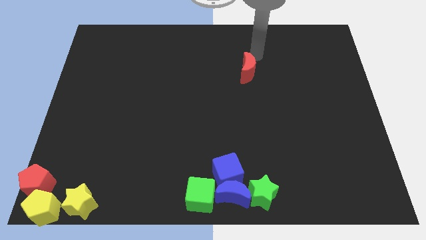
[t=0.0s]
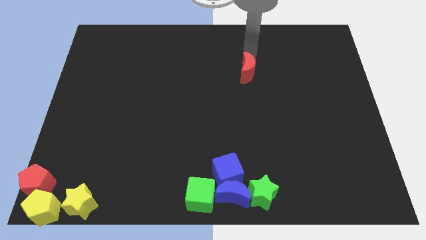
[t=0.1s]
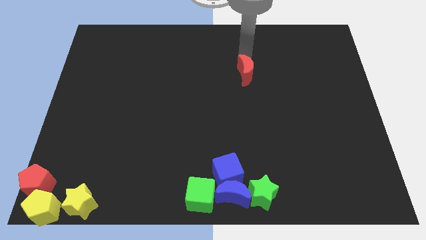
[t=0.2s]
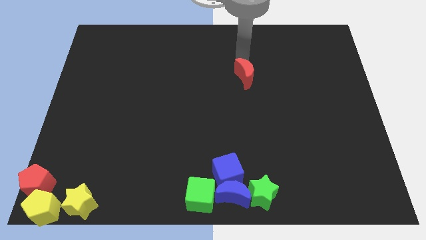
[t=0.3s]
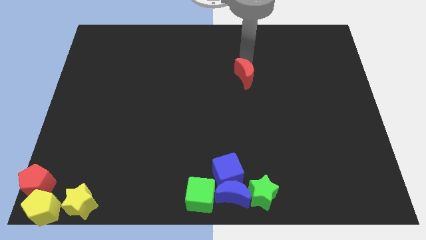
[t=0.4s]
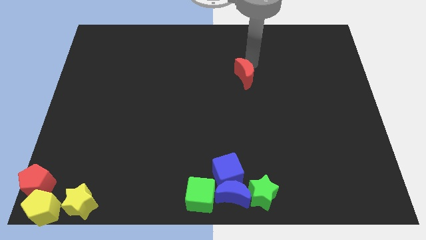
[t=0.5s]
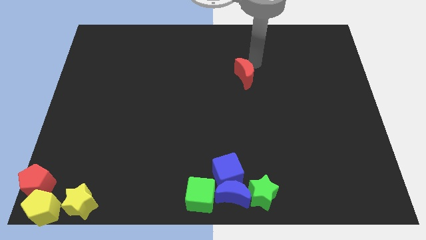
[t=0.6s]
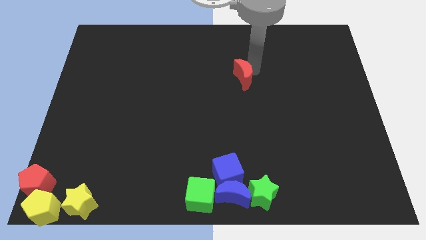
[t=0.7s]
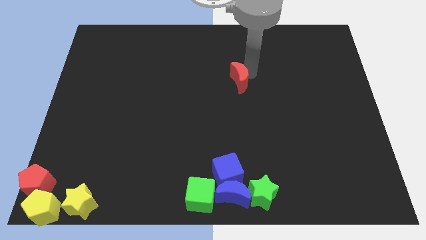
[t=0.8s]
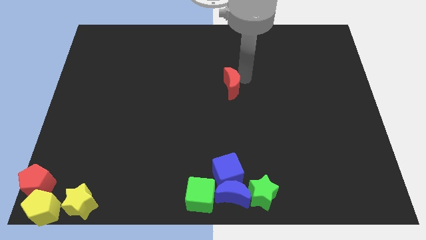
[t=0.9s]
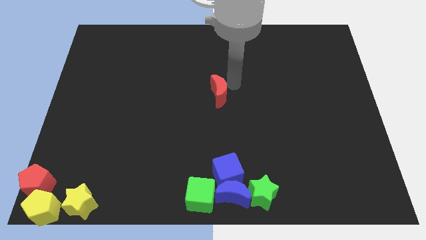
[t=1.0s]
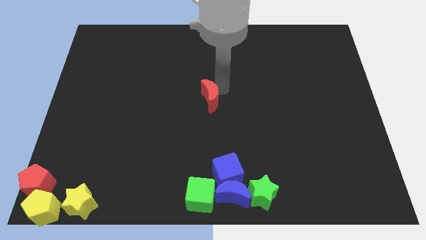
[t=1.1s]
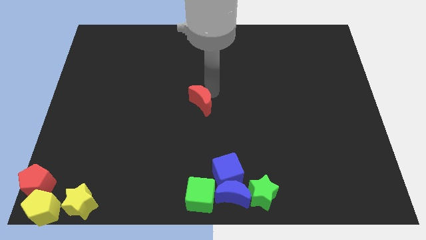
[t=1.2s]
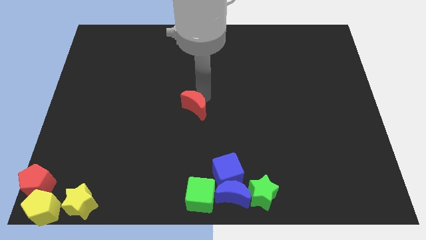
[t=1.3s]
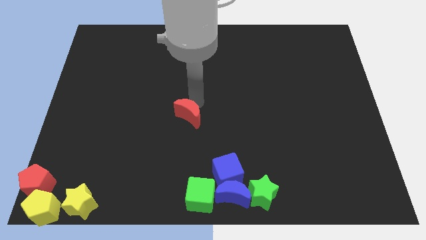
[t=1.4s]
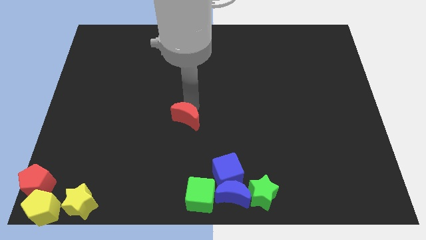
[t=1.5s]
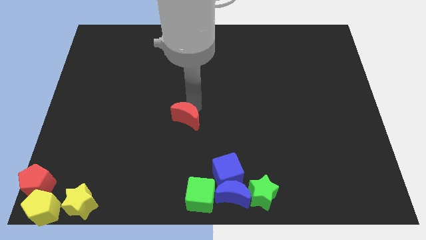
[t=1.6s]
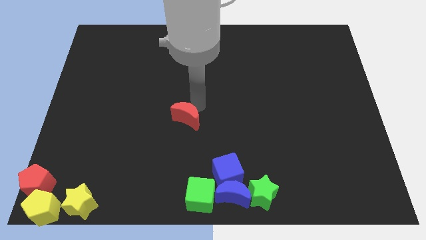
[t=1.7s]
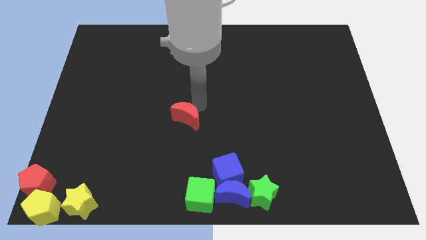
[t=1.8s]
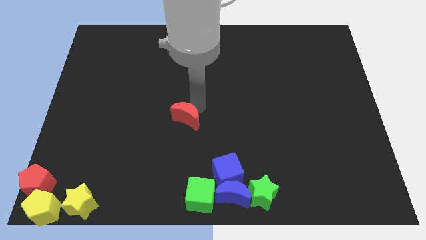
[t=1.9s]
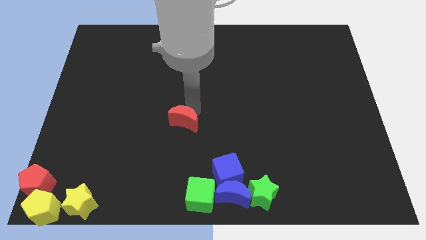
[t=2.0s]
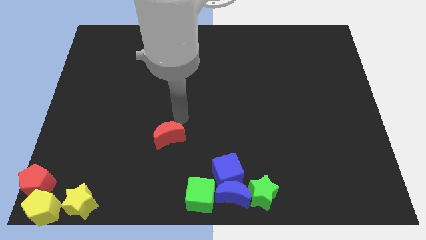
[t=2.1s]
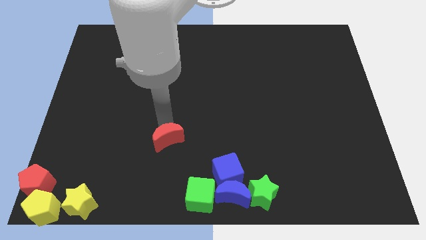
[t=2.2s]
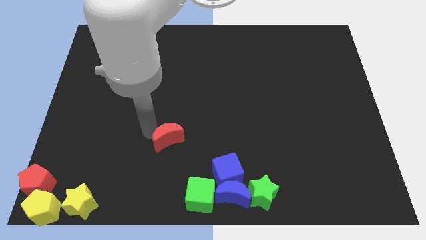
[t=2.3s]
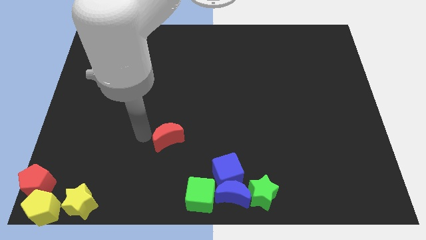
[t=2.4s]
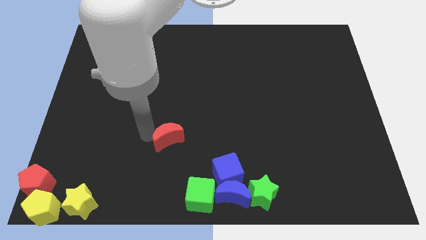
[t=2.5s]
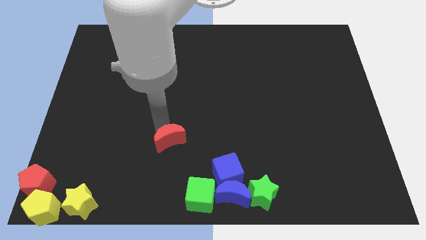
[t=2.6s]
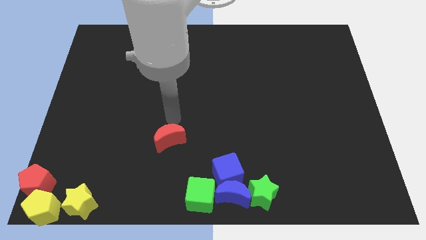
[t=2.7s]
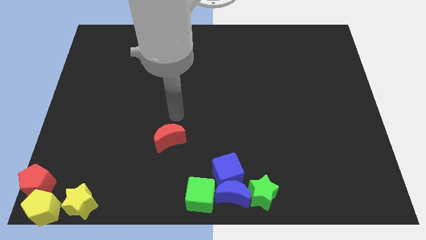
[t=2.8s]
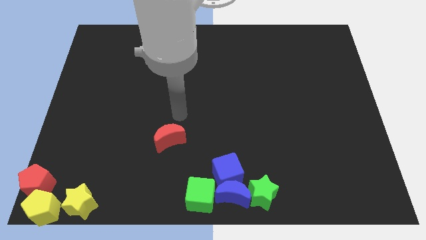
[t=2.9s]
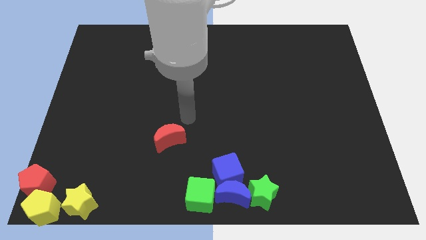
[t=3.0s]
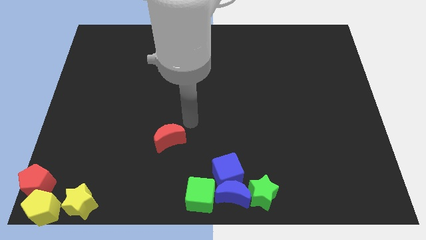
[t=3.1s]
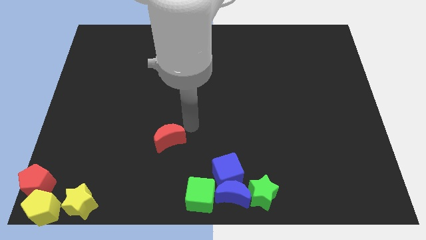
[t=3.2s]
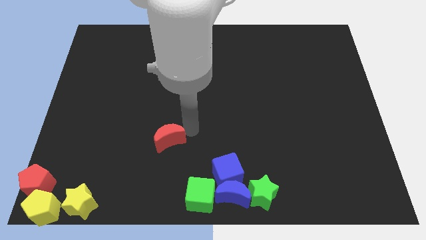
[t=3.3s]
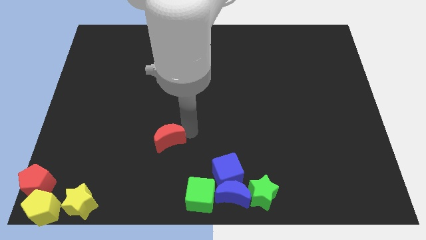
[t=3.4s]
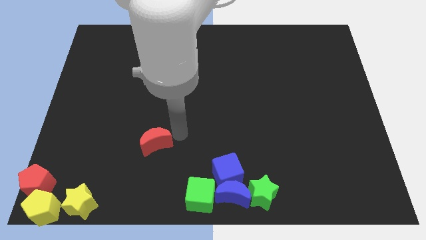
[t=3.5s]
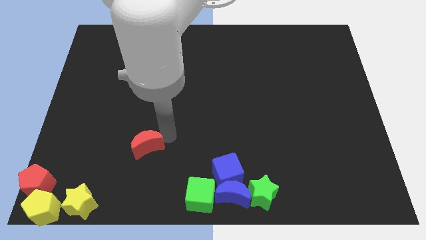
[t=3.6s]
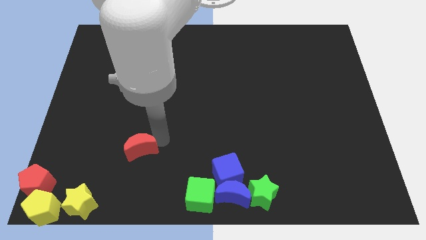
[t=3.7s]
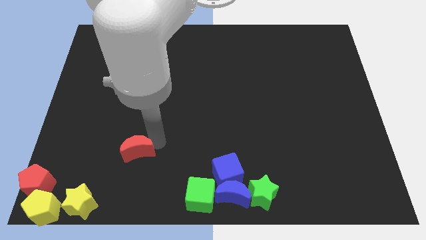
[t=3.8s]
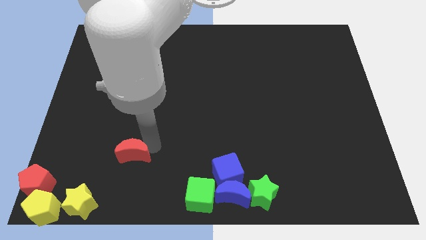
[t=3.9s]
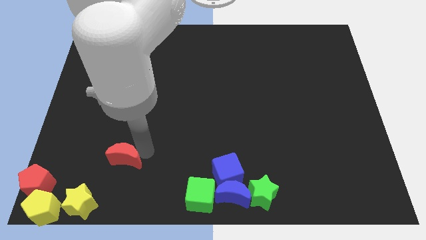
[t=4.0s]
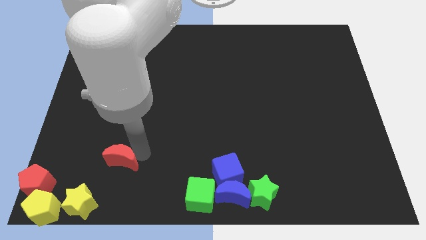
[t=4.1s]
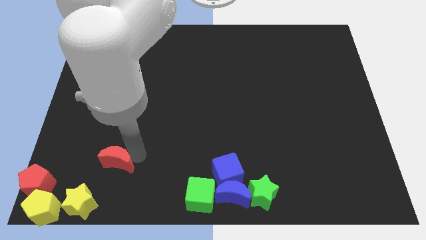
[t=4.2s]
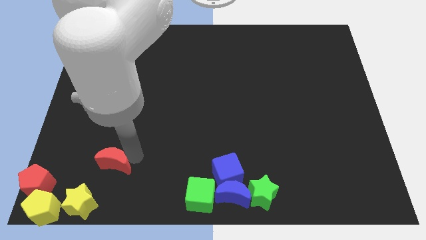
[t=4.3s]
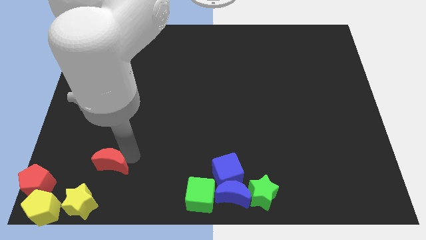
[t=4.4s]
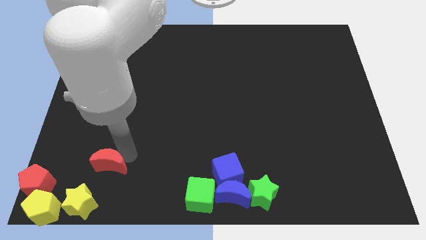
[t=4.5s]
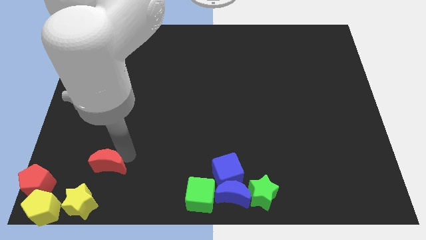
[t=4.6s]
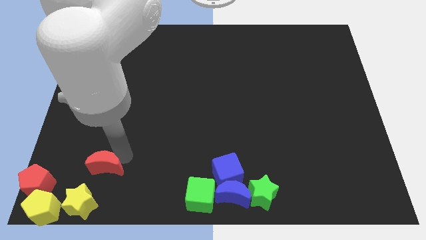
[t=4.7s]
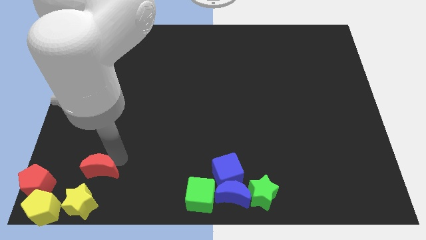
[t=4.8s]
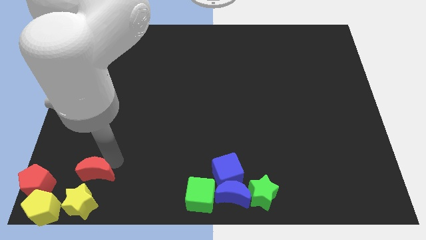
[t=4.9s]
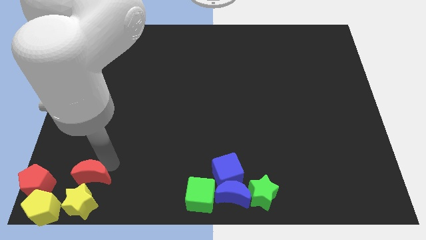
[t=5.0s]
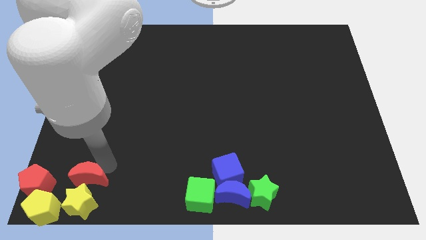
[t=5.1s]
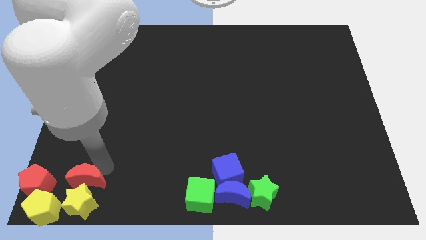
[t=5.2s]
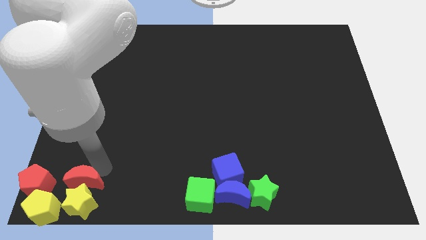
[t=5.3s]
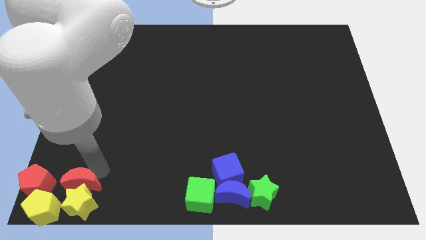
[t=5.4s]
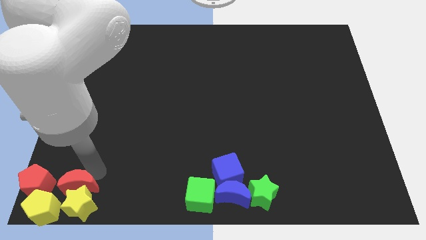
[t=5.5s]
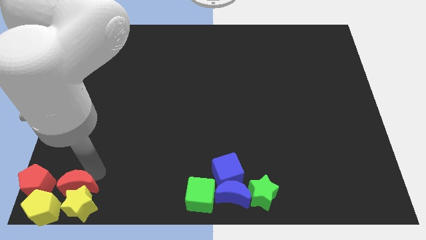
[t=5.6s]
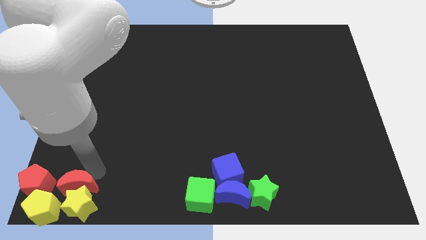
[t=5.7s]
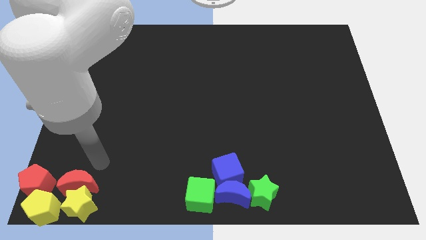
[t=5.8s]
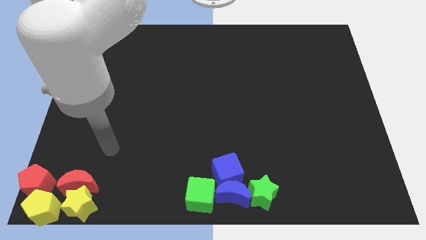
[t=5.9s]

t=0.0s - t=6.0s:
push the red crescent to the right of the red pentagon

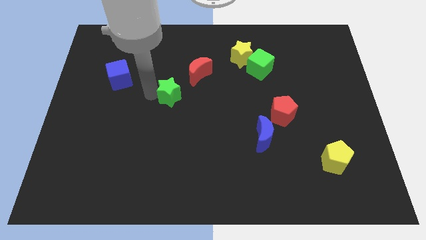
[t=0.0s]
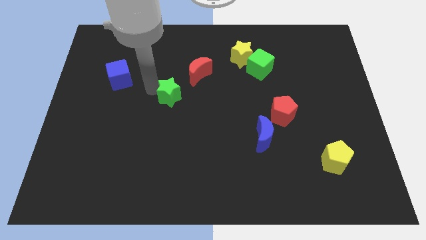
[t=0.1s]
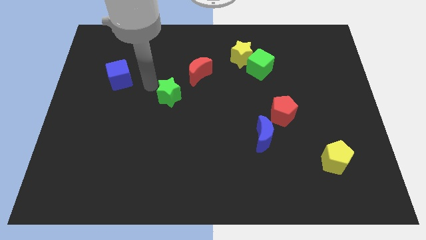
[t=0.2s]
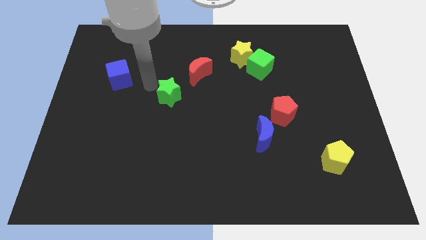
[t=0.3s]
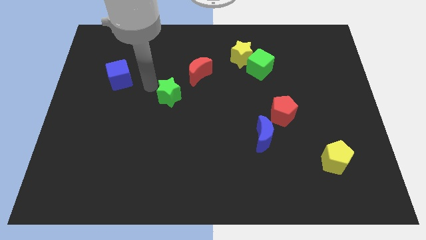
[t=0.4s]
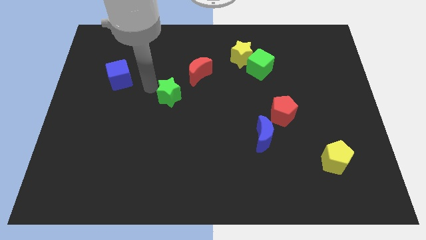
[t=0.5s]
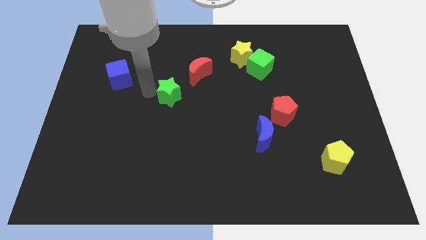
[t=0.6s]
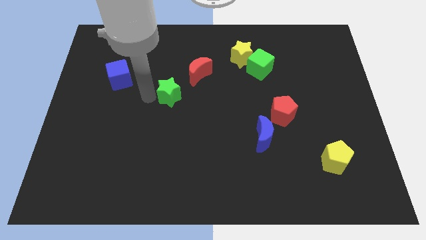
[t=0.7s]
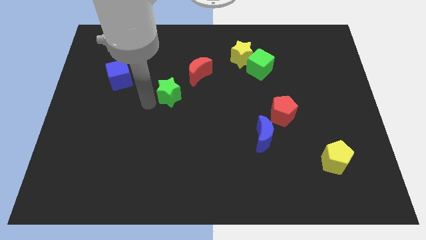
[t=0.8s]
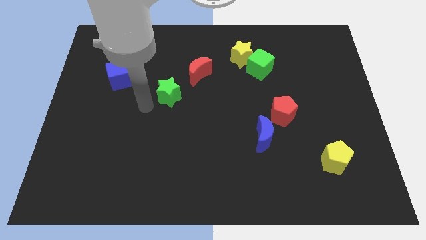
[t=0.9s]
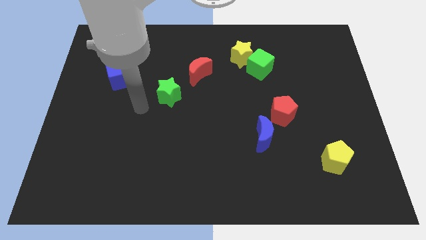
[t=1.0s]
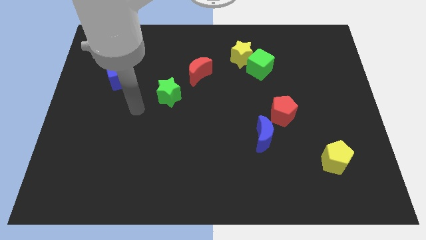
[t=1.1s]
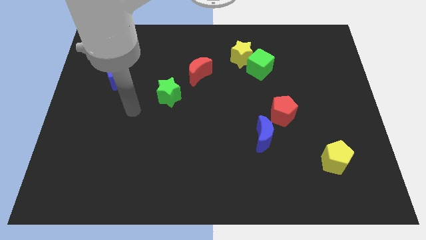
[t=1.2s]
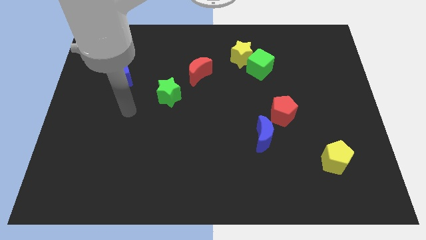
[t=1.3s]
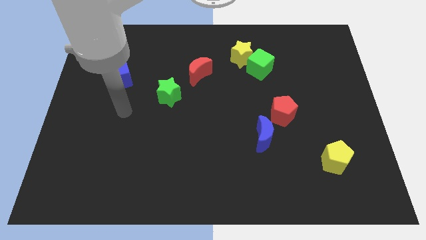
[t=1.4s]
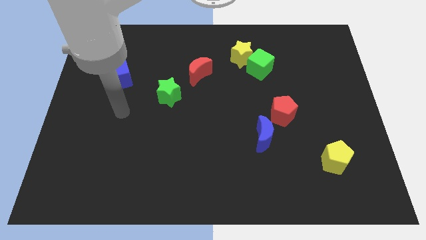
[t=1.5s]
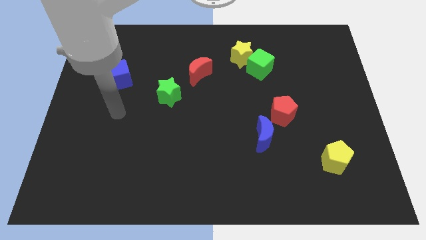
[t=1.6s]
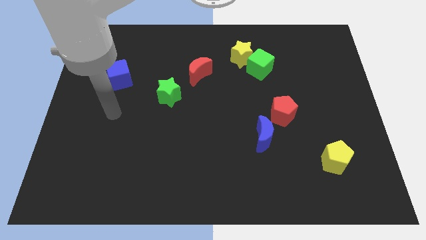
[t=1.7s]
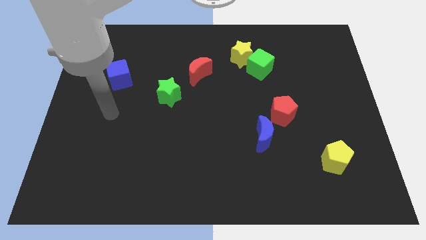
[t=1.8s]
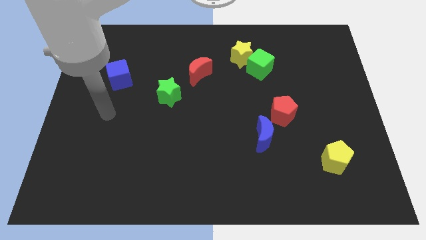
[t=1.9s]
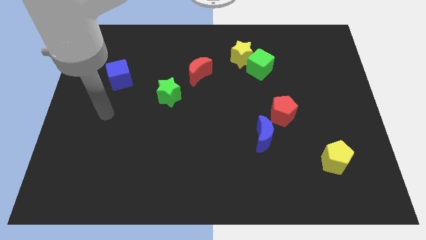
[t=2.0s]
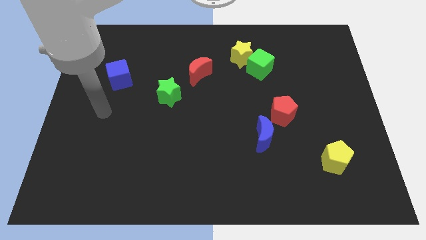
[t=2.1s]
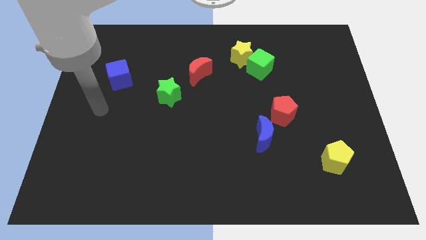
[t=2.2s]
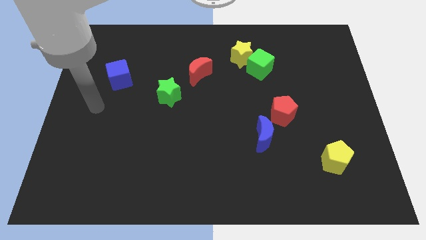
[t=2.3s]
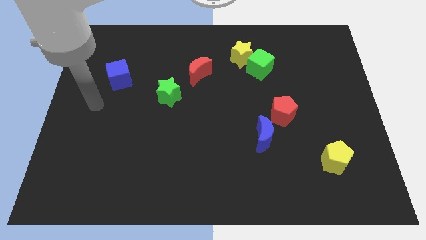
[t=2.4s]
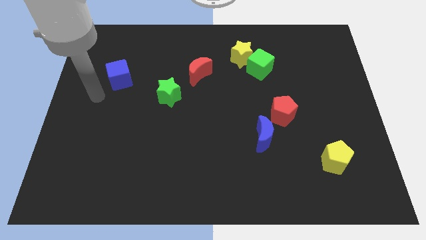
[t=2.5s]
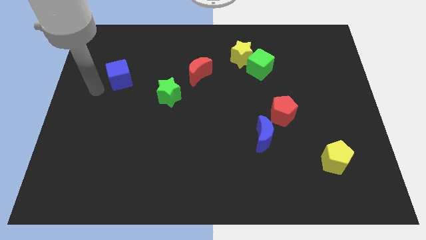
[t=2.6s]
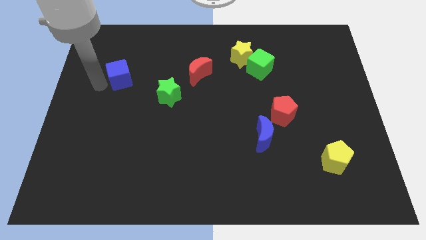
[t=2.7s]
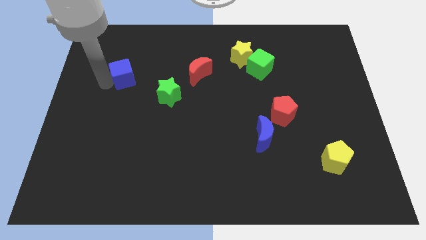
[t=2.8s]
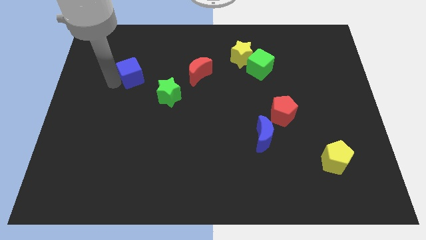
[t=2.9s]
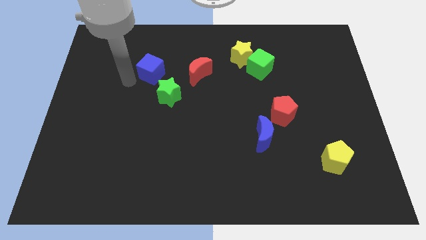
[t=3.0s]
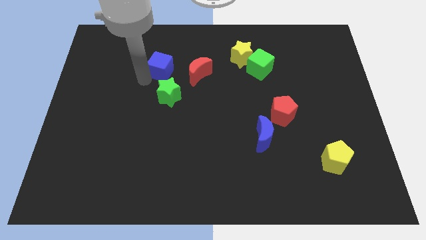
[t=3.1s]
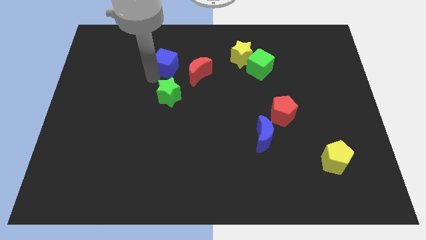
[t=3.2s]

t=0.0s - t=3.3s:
move the blue cube diagonally to the top left red moon
